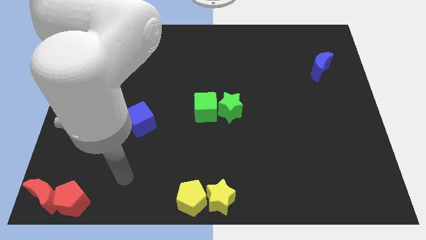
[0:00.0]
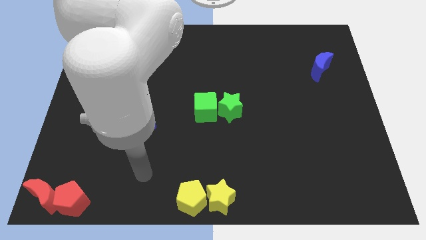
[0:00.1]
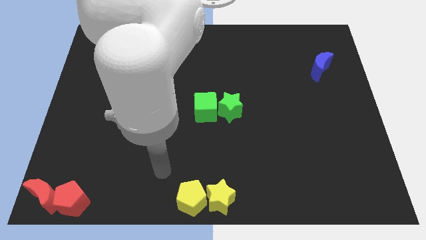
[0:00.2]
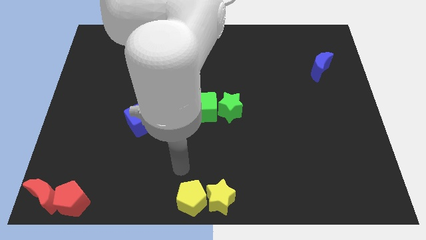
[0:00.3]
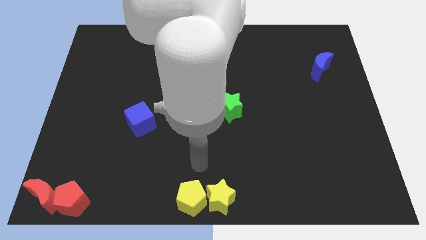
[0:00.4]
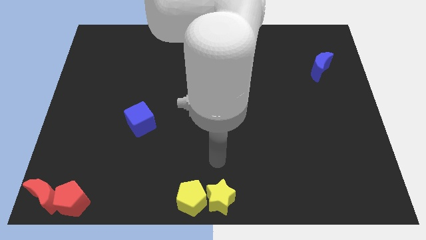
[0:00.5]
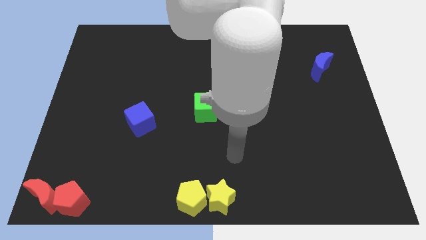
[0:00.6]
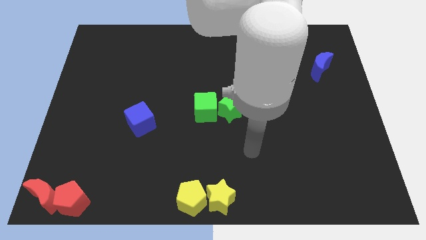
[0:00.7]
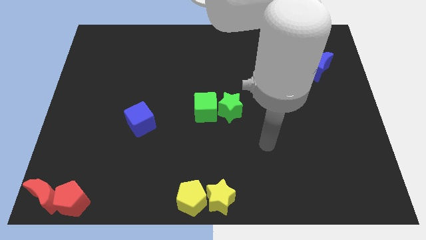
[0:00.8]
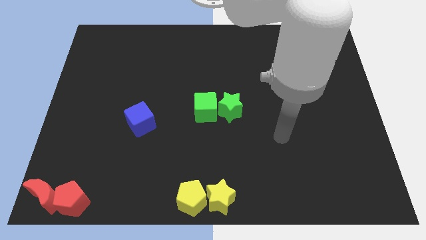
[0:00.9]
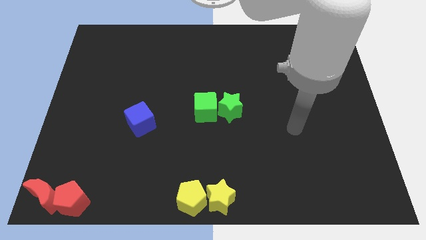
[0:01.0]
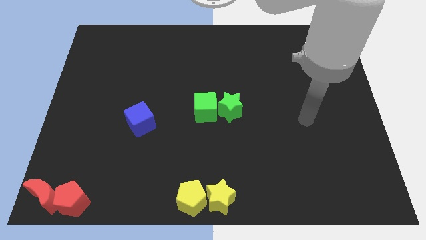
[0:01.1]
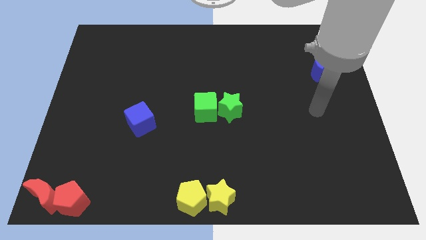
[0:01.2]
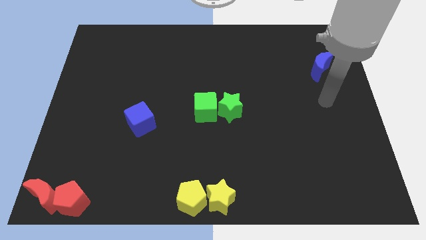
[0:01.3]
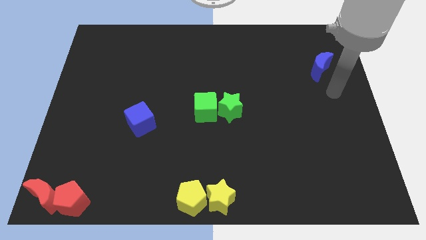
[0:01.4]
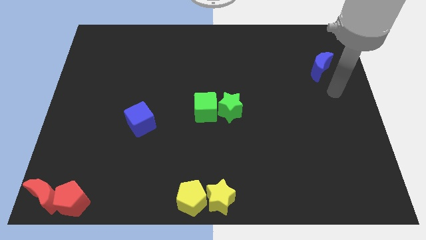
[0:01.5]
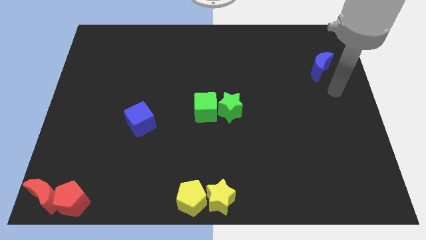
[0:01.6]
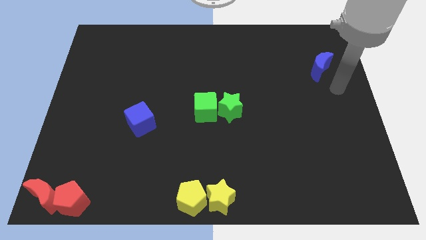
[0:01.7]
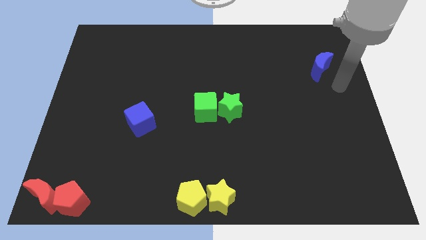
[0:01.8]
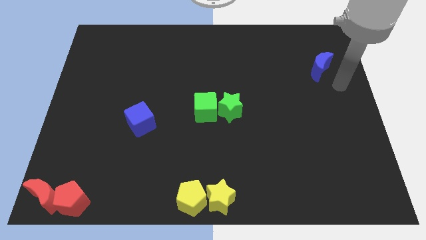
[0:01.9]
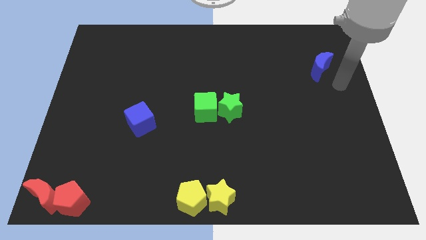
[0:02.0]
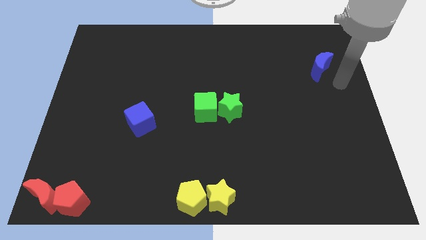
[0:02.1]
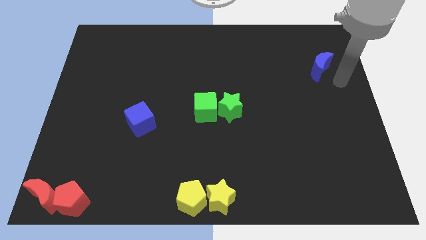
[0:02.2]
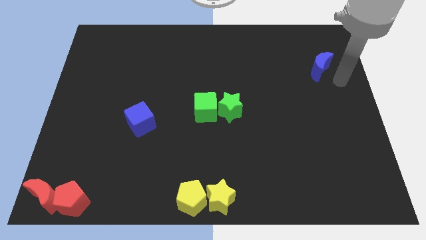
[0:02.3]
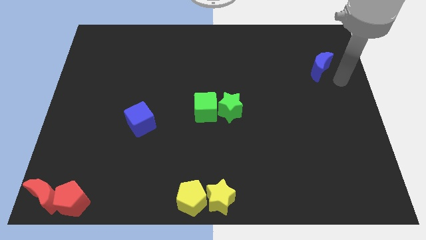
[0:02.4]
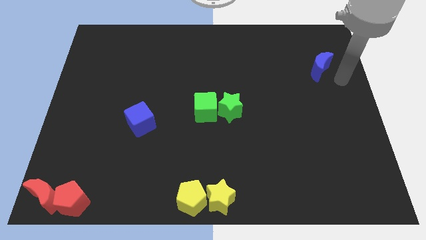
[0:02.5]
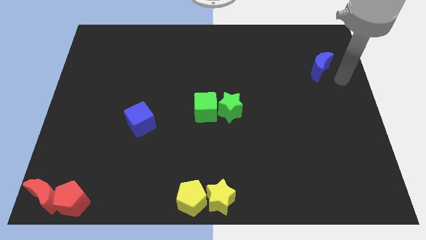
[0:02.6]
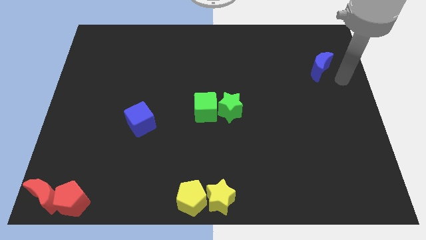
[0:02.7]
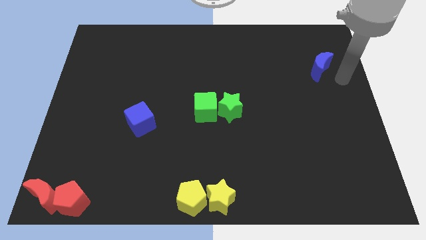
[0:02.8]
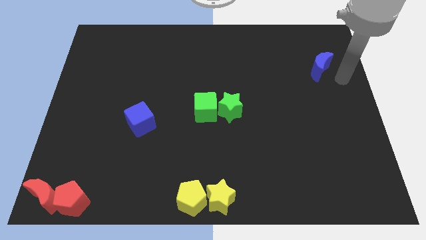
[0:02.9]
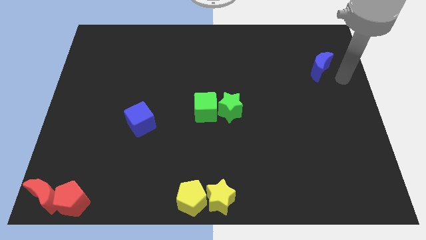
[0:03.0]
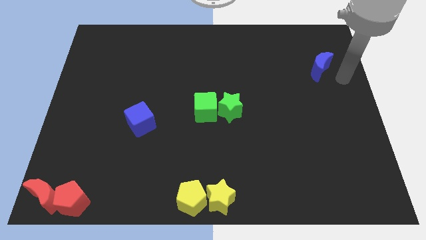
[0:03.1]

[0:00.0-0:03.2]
move your arm to the right side of the blue crescent

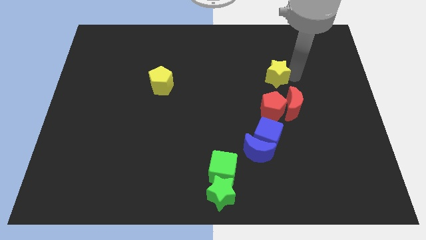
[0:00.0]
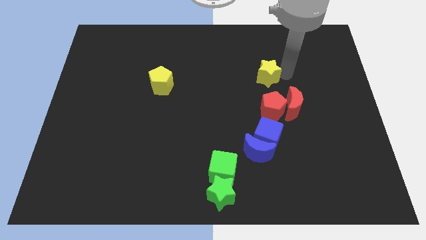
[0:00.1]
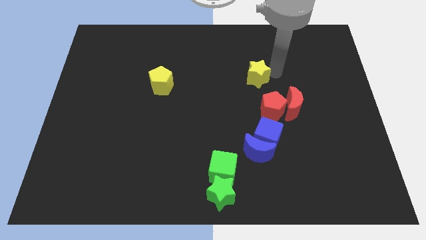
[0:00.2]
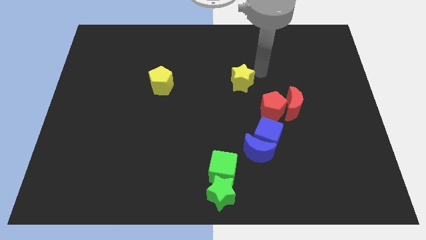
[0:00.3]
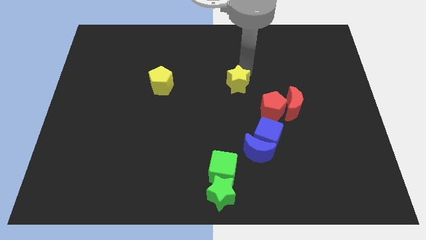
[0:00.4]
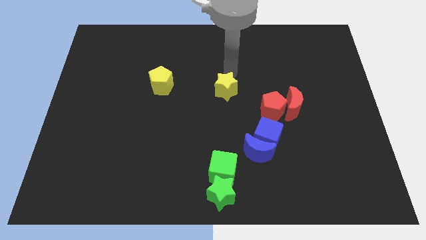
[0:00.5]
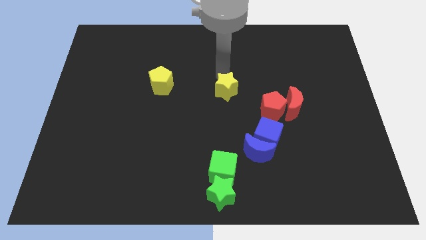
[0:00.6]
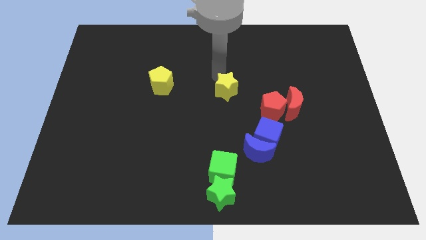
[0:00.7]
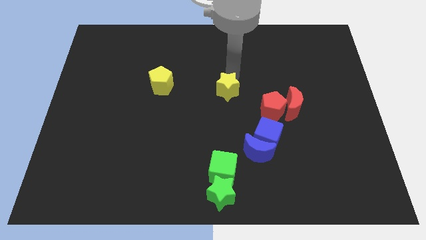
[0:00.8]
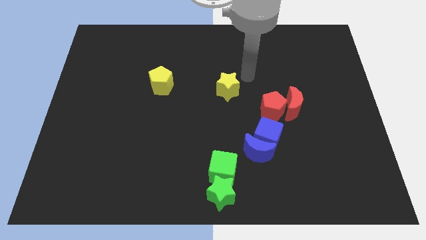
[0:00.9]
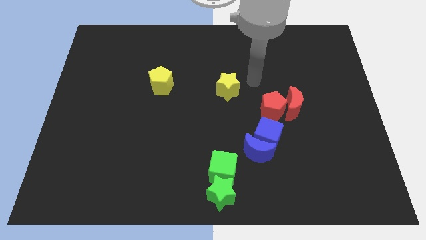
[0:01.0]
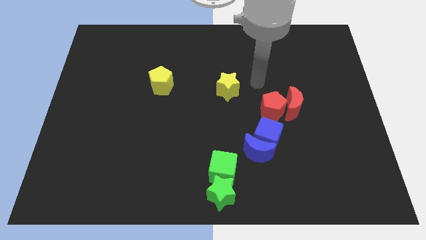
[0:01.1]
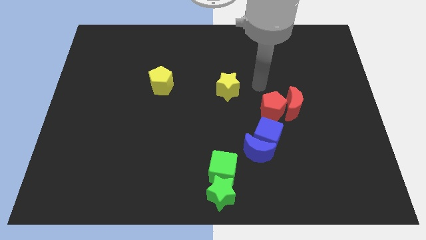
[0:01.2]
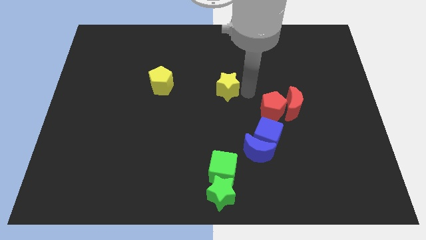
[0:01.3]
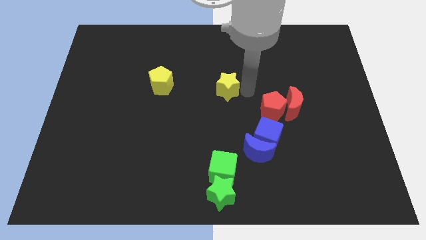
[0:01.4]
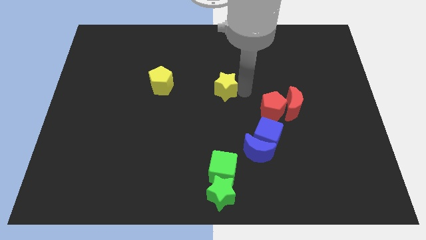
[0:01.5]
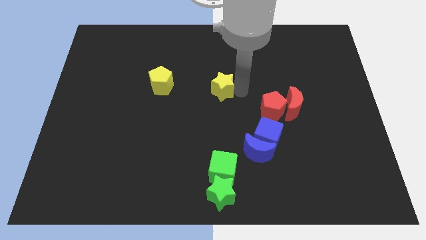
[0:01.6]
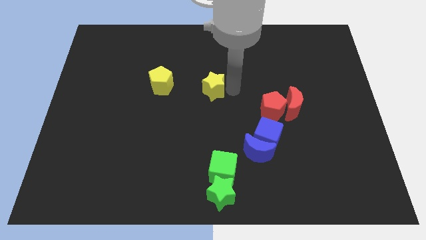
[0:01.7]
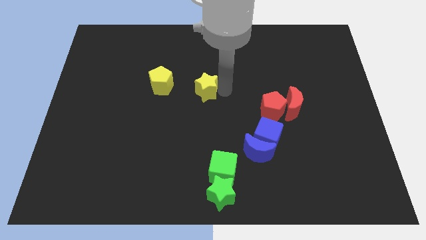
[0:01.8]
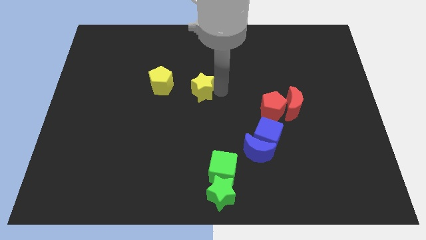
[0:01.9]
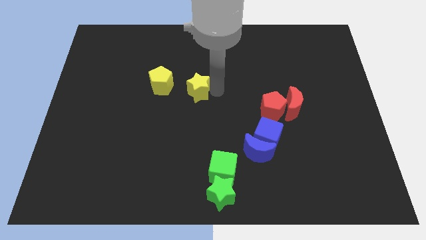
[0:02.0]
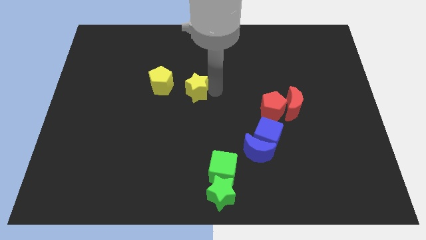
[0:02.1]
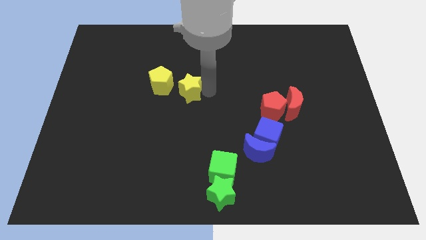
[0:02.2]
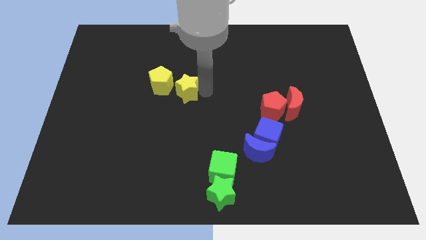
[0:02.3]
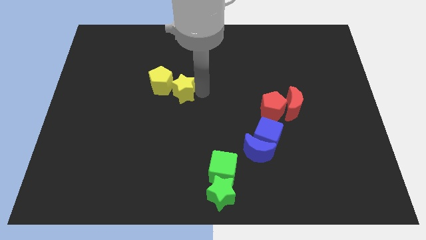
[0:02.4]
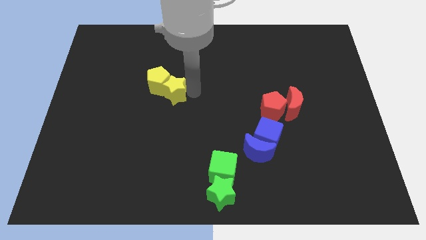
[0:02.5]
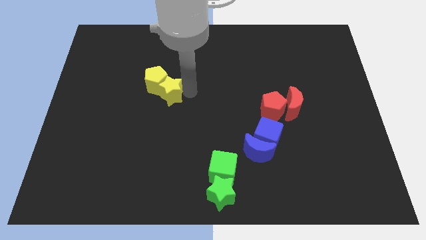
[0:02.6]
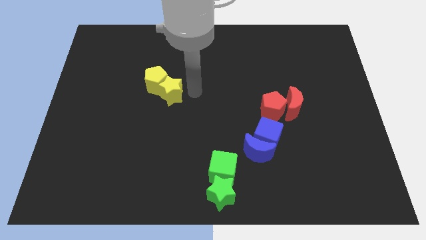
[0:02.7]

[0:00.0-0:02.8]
place yellow start near yellow pentagon

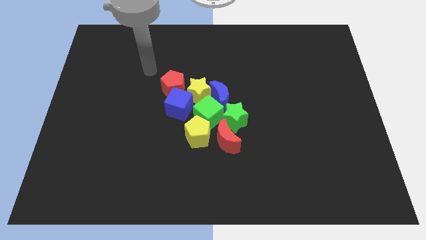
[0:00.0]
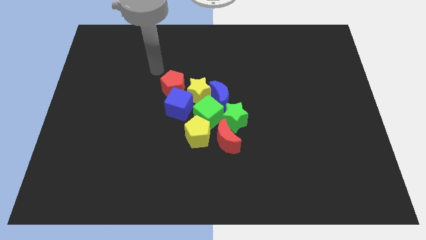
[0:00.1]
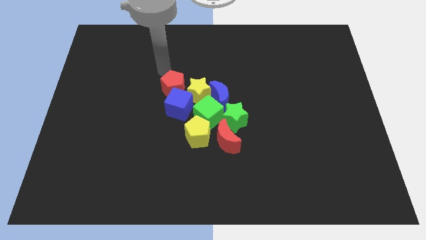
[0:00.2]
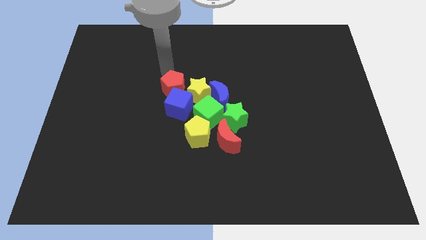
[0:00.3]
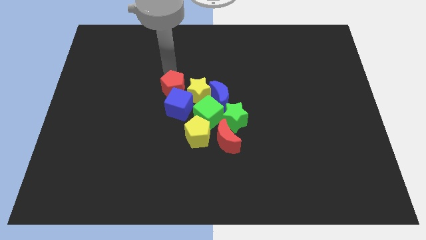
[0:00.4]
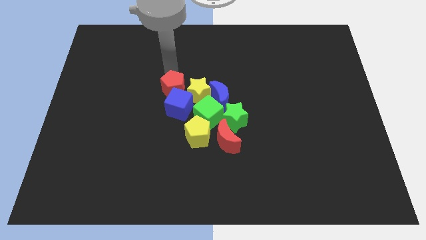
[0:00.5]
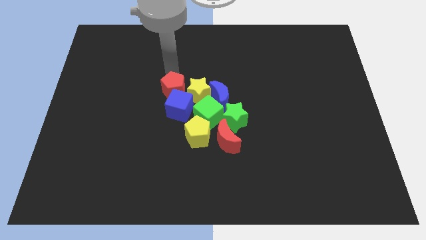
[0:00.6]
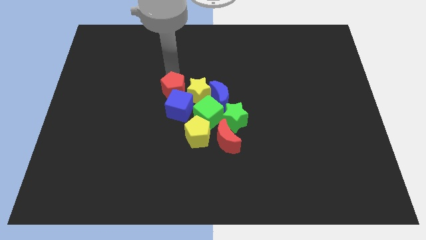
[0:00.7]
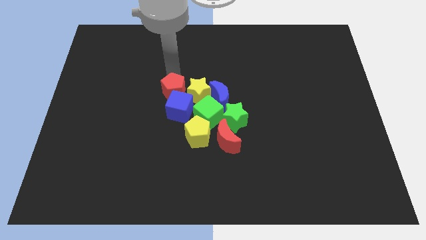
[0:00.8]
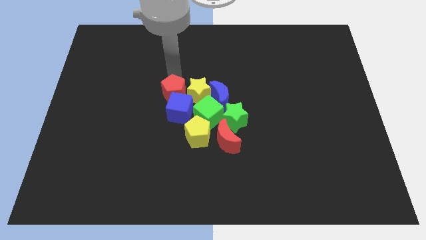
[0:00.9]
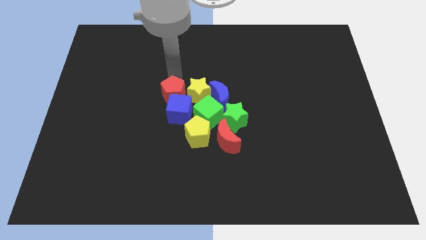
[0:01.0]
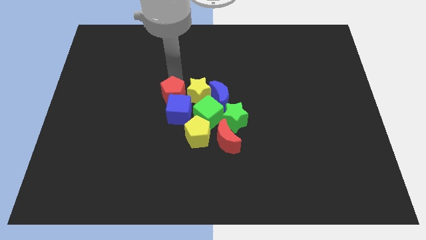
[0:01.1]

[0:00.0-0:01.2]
push the red pentagon into the blue cube

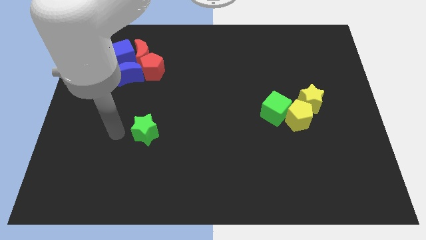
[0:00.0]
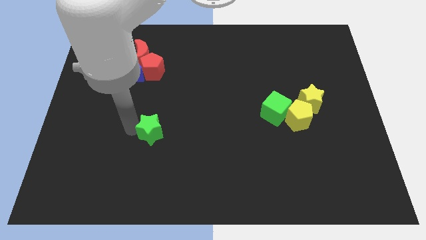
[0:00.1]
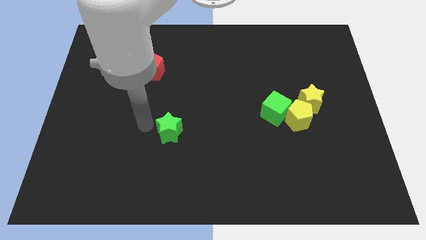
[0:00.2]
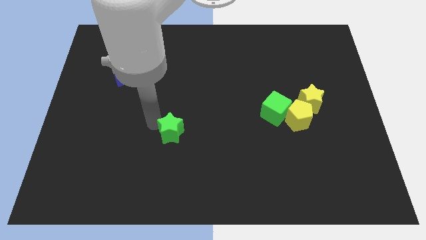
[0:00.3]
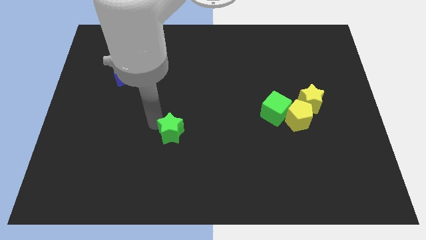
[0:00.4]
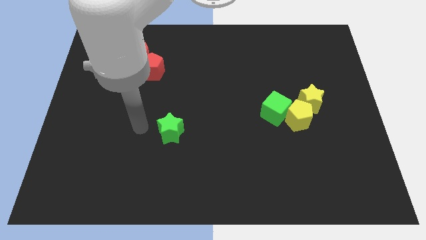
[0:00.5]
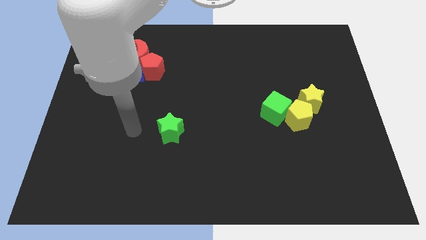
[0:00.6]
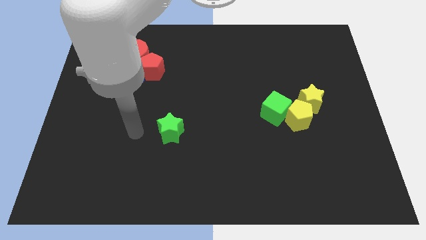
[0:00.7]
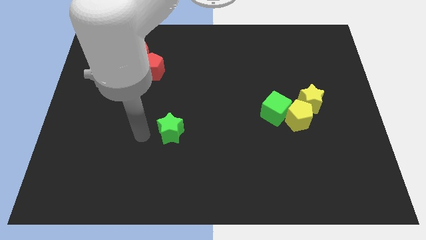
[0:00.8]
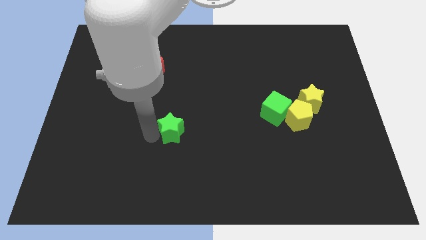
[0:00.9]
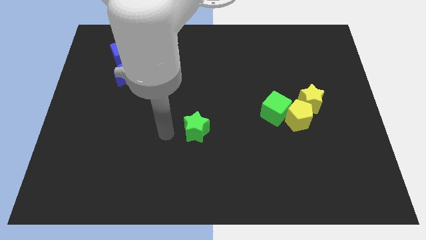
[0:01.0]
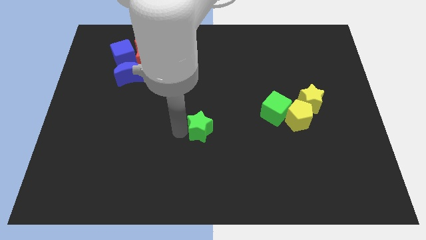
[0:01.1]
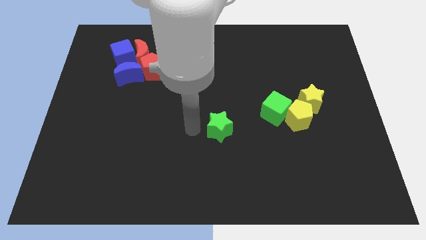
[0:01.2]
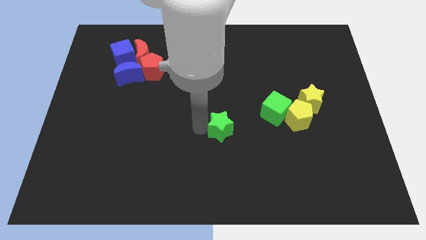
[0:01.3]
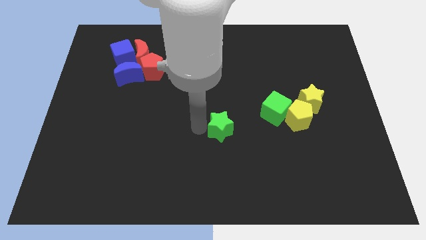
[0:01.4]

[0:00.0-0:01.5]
move the green star towards the green cube
